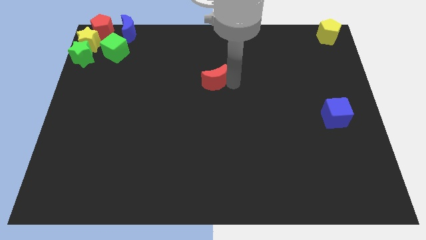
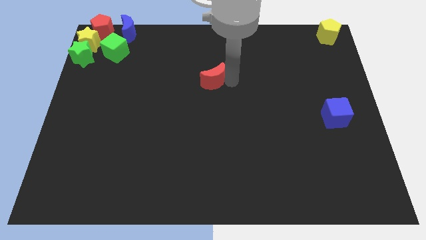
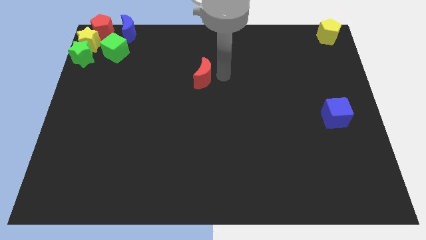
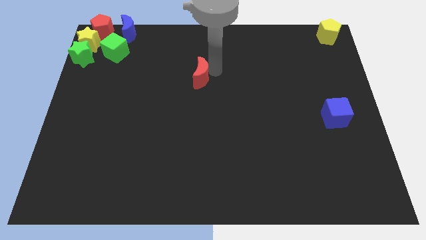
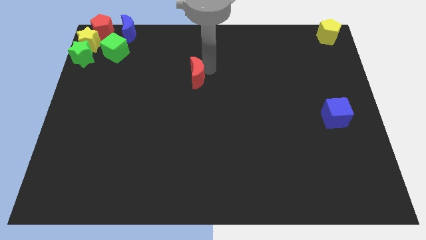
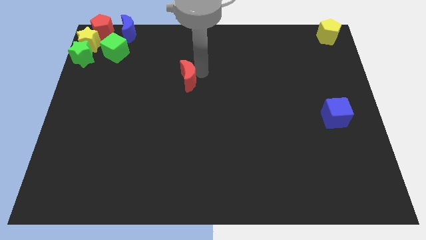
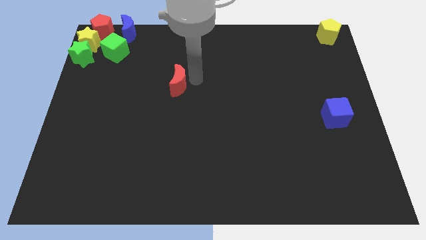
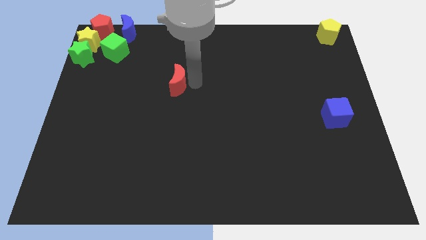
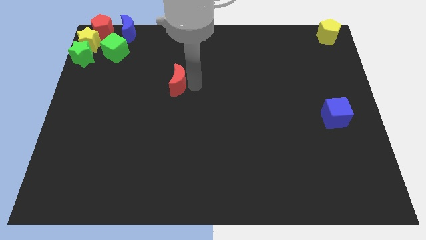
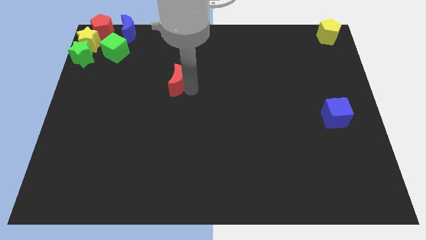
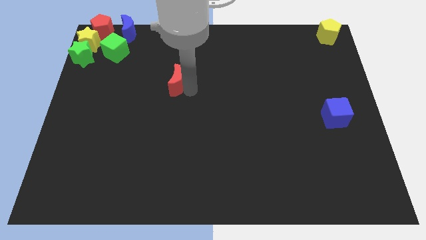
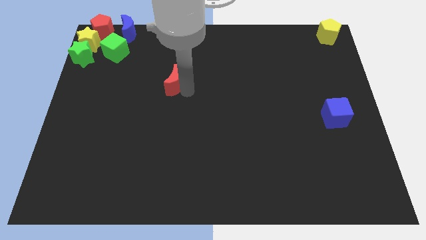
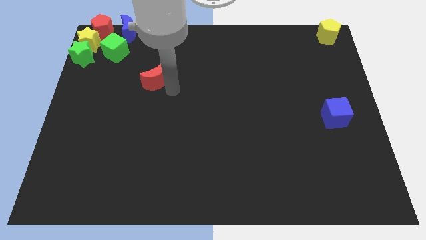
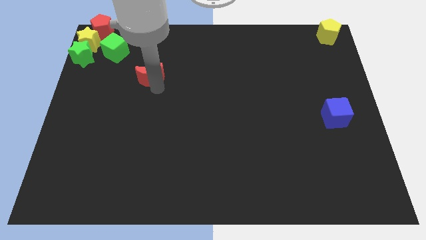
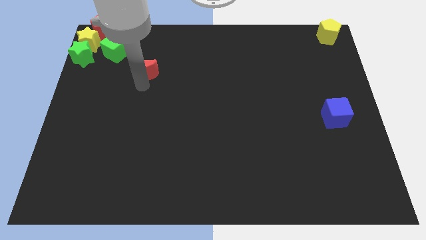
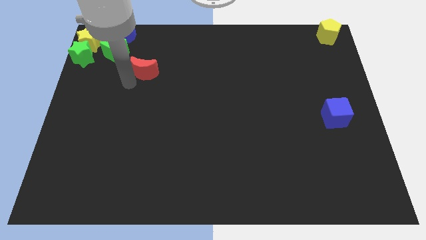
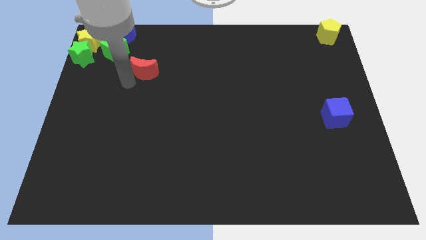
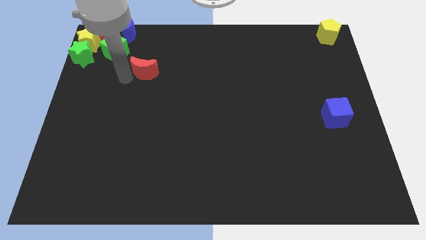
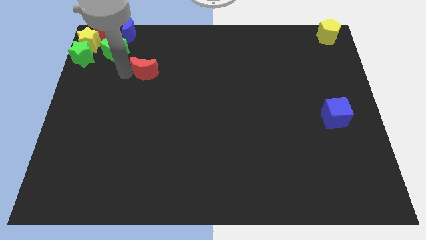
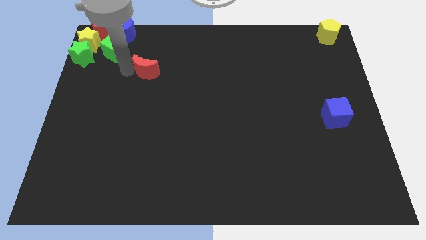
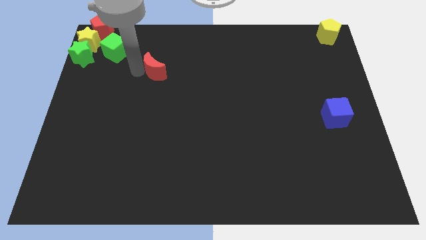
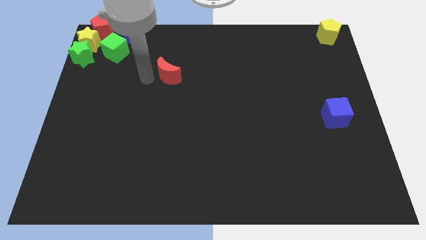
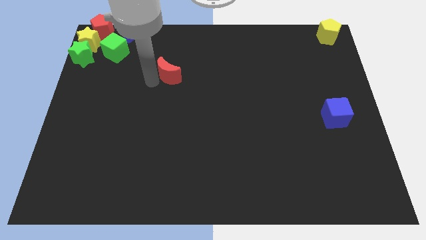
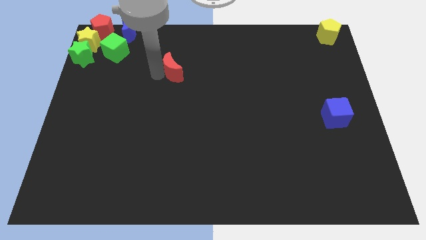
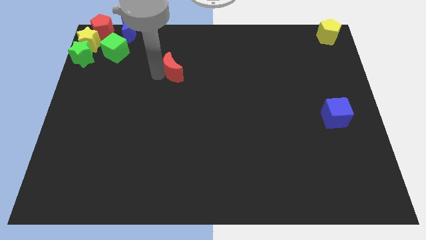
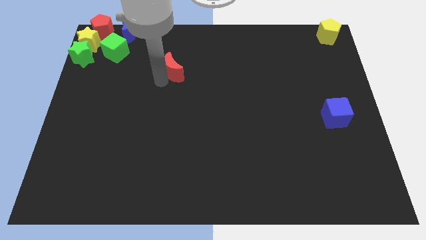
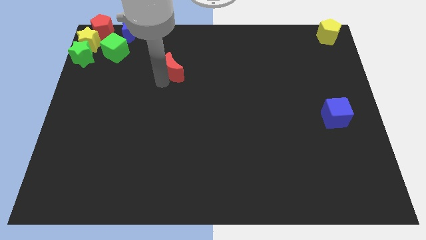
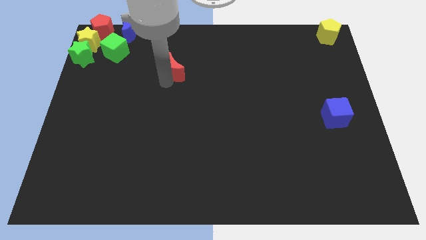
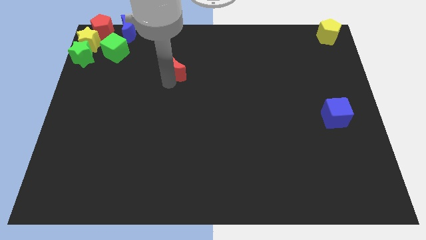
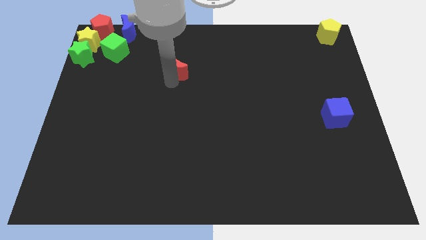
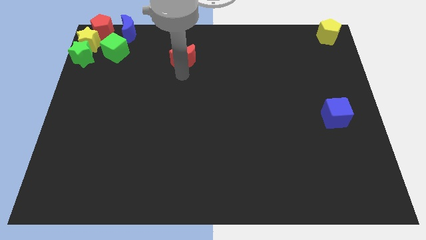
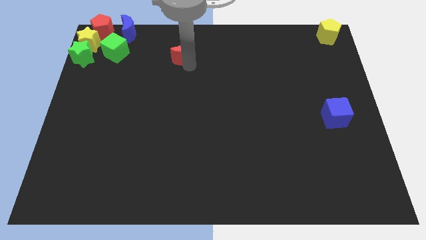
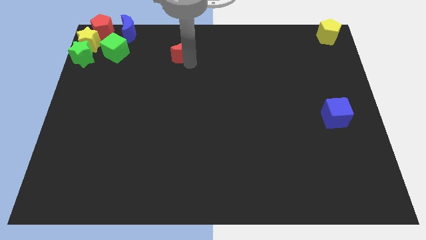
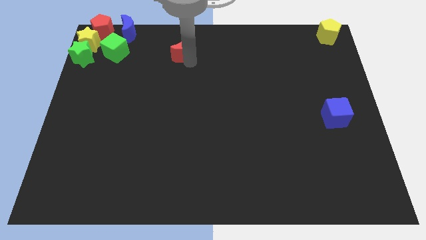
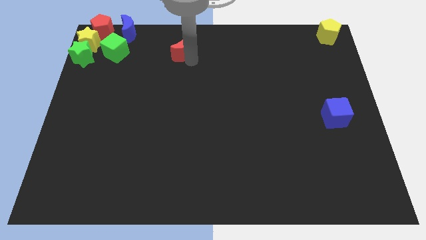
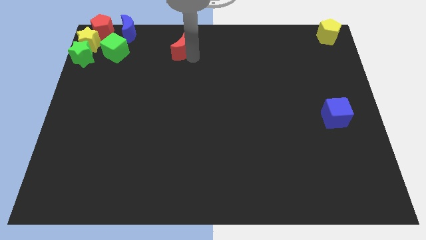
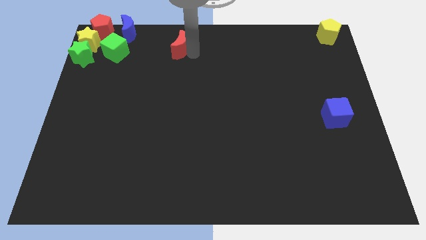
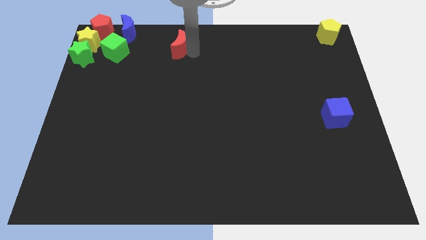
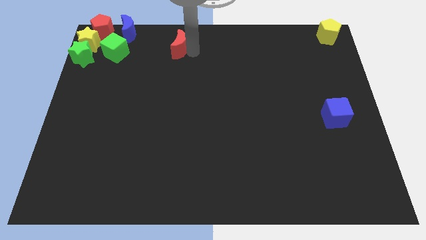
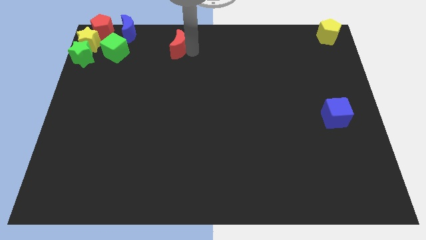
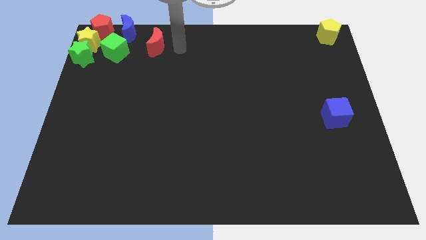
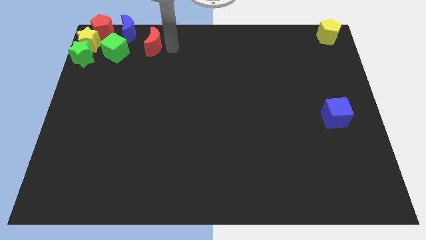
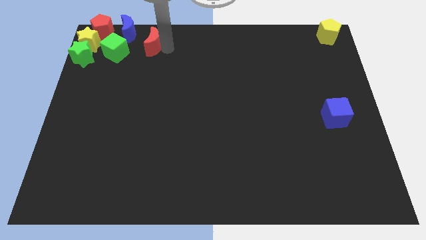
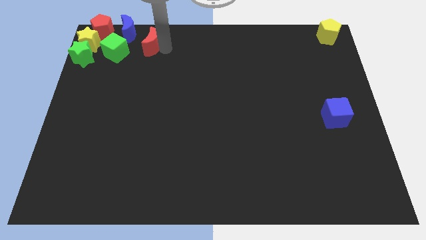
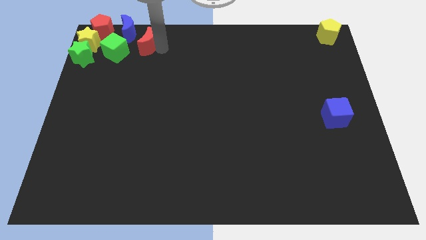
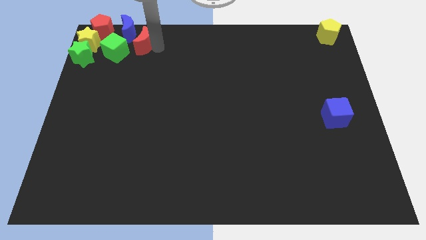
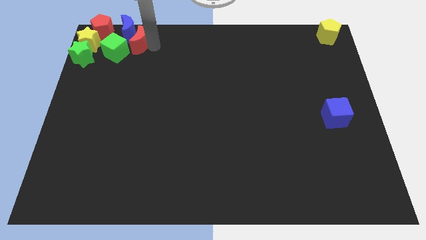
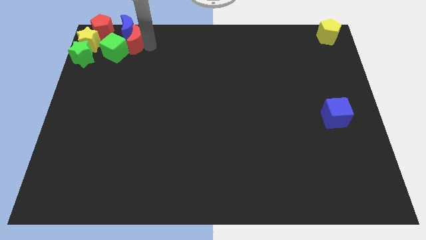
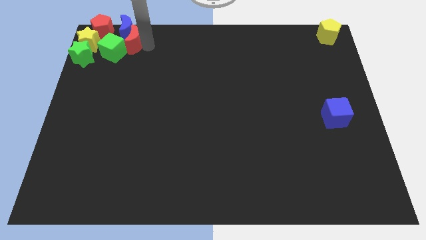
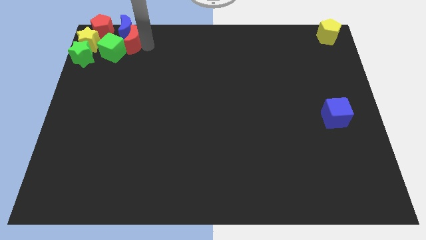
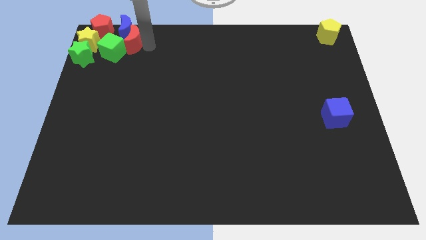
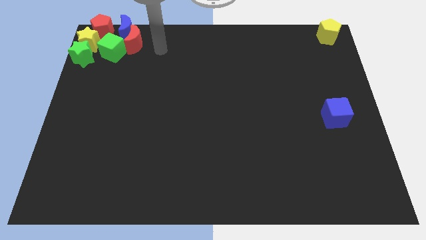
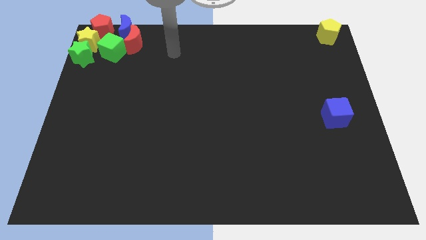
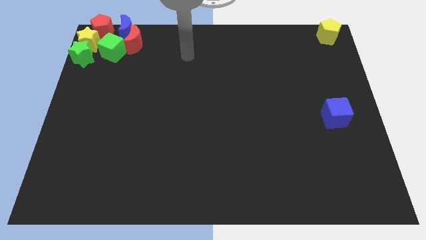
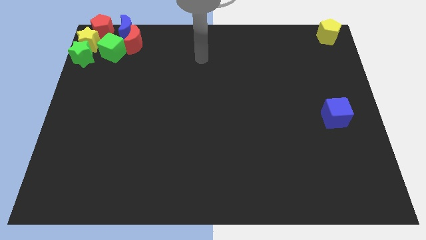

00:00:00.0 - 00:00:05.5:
push the red moon into the group of blocks

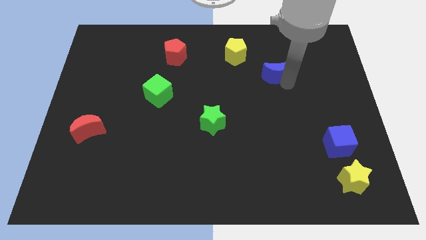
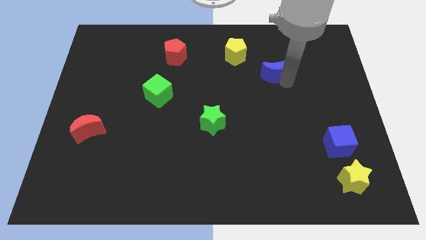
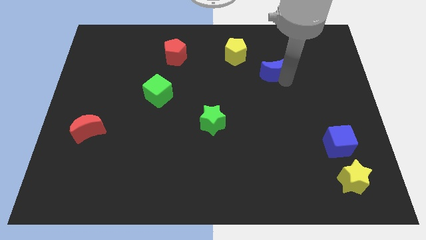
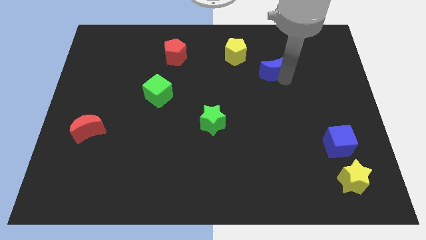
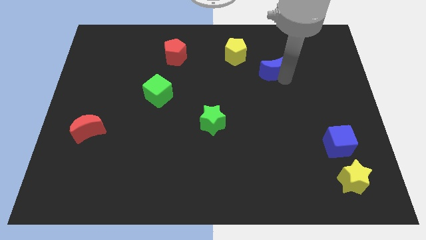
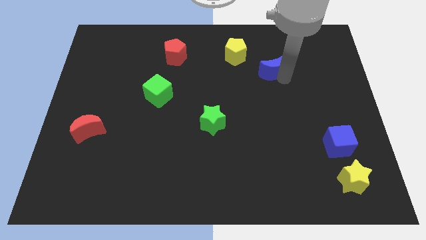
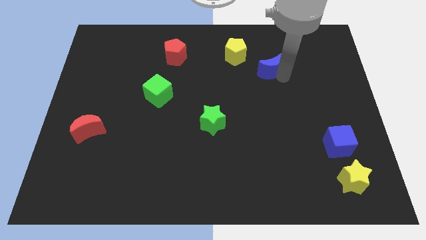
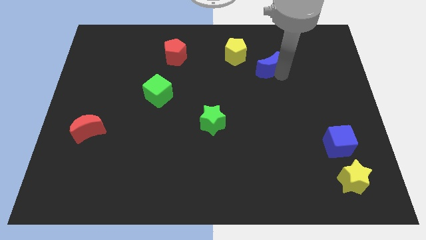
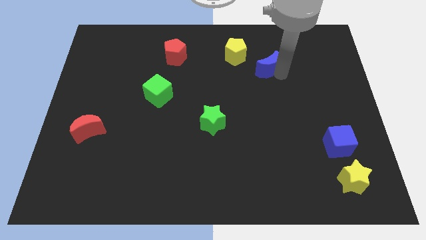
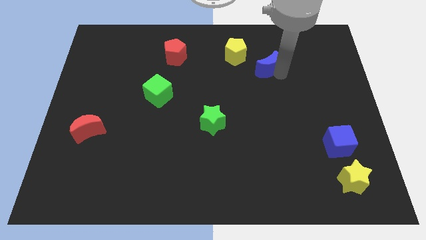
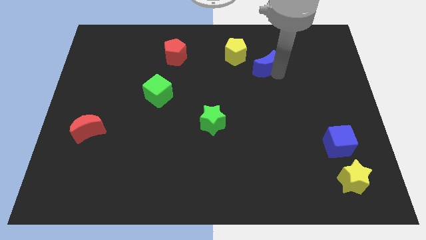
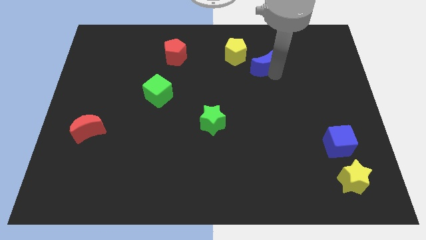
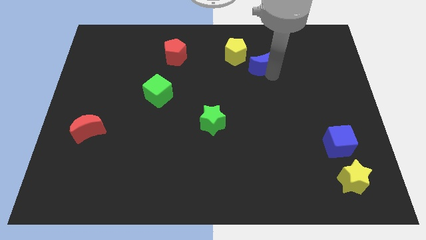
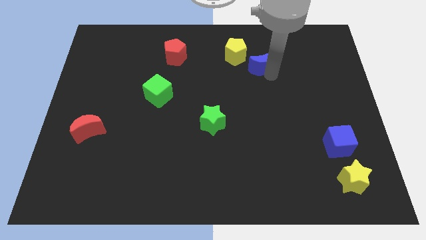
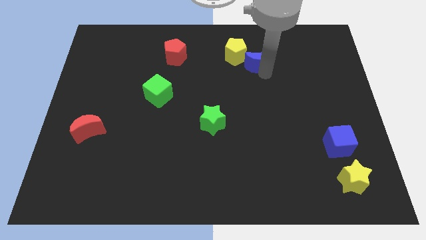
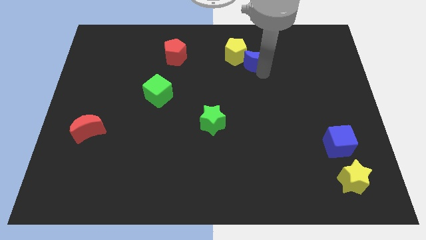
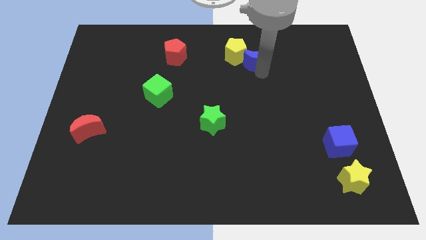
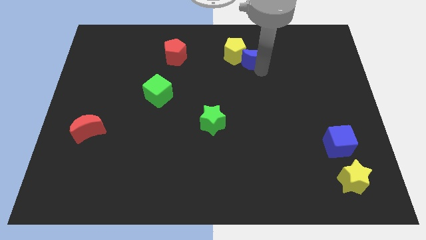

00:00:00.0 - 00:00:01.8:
move the blue crescent to the right of the yellow pentagon

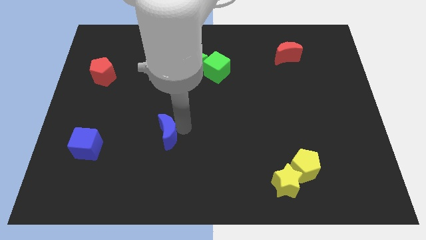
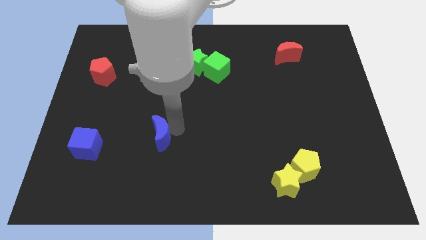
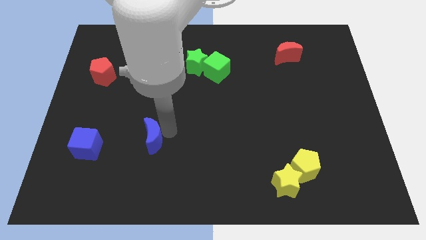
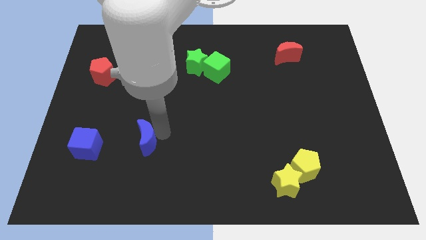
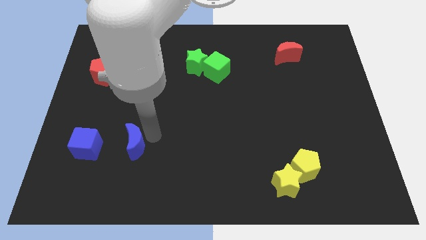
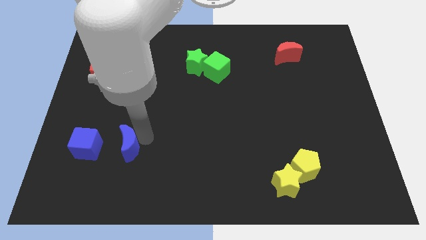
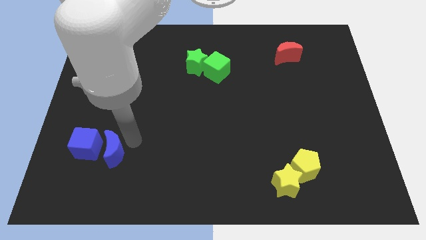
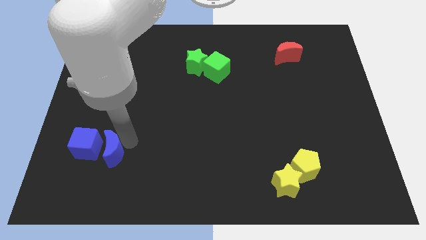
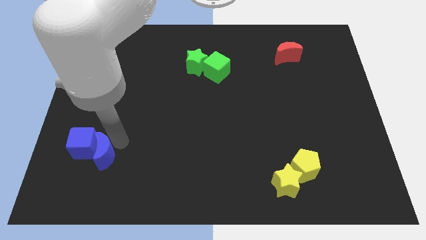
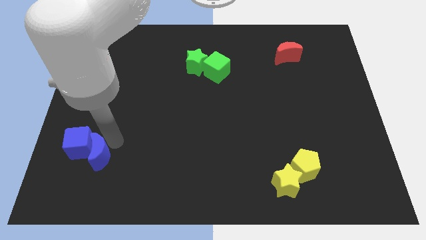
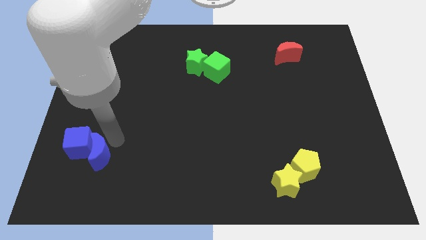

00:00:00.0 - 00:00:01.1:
push the blue crescent to the right of the blue cube

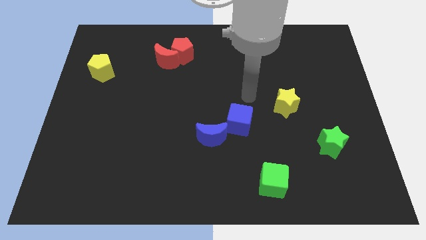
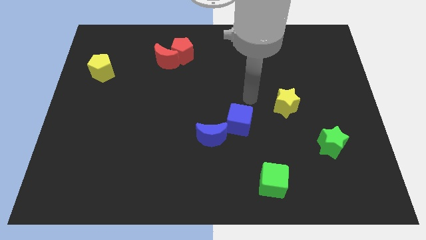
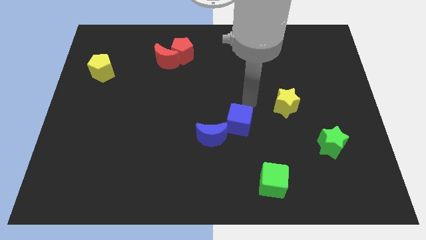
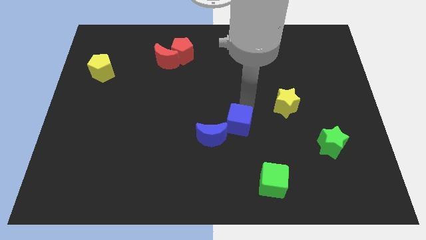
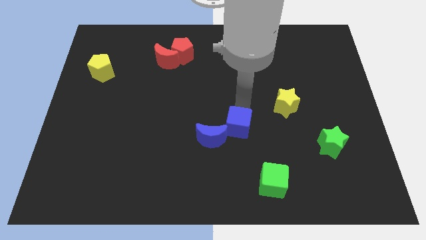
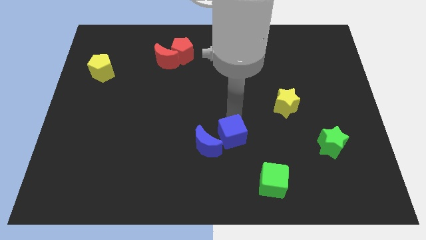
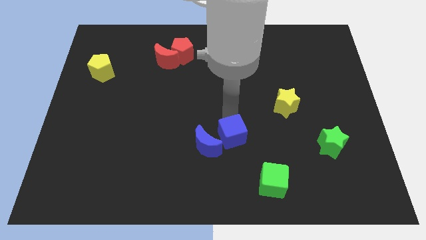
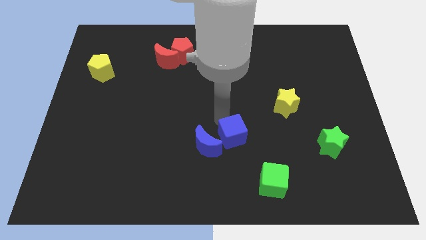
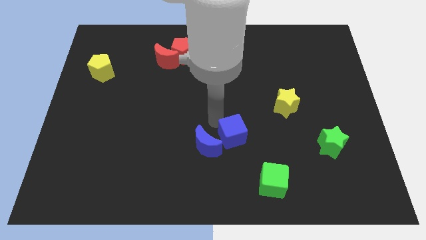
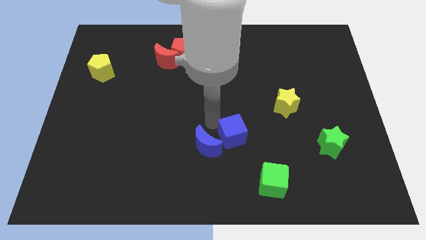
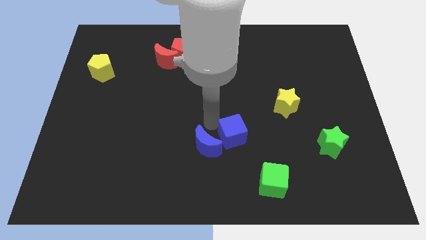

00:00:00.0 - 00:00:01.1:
place your hand in between blue blocks
